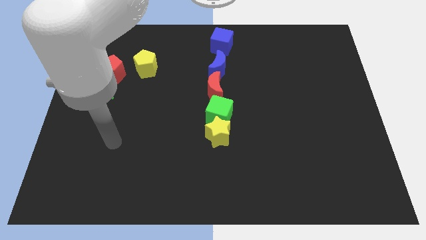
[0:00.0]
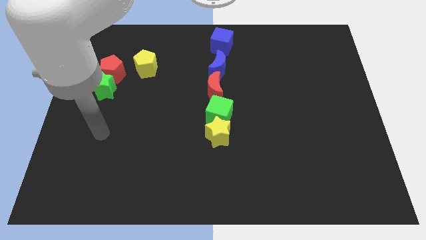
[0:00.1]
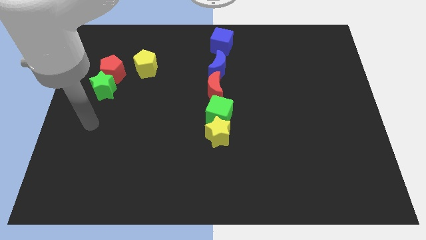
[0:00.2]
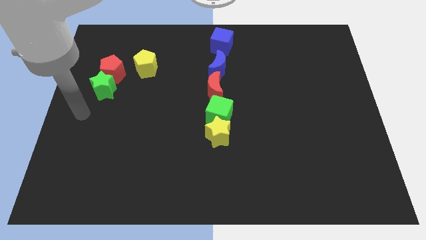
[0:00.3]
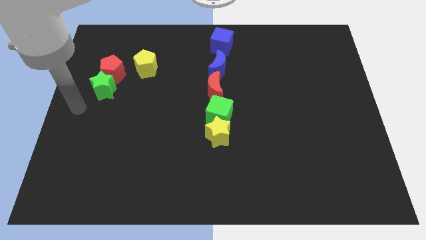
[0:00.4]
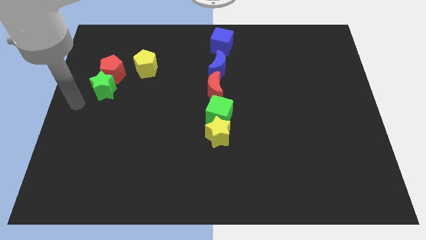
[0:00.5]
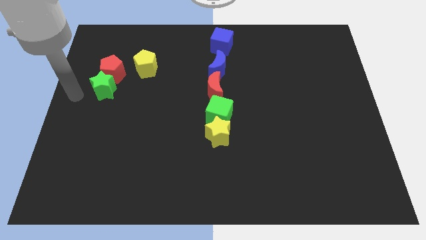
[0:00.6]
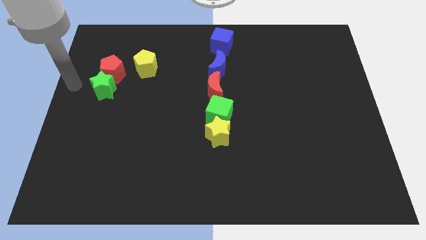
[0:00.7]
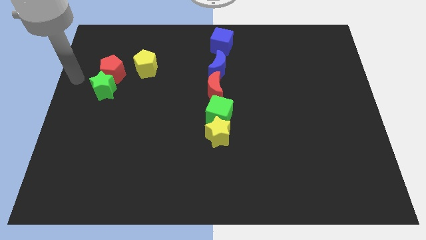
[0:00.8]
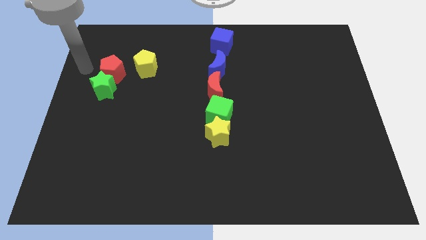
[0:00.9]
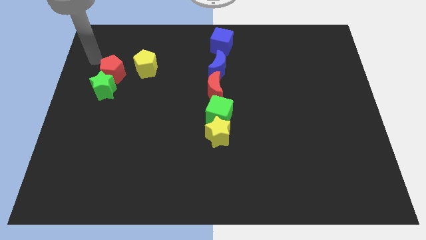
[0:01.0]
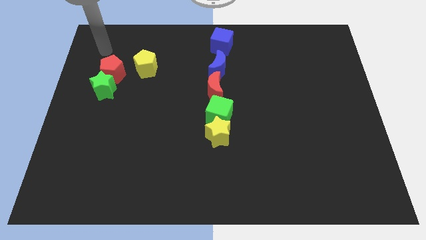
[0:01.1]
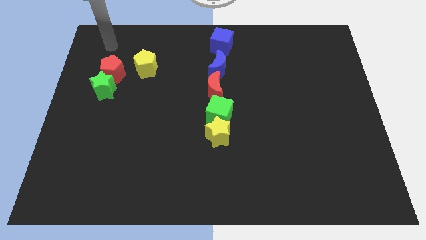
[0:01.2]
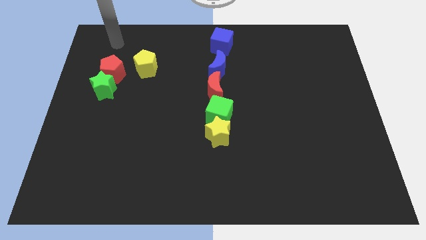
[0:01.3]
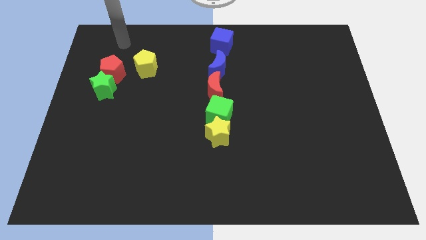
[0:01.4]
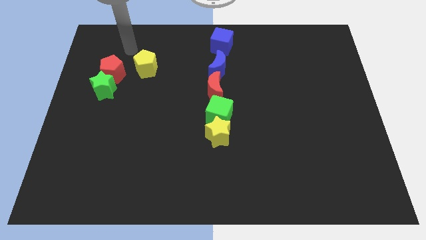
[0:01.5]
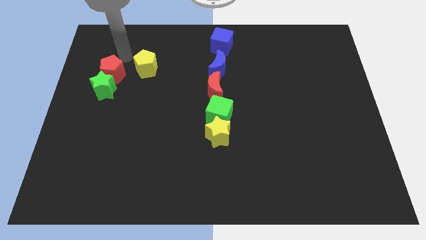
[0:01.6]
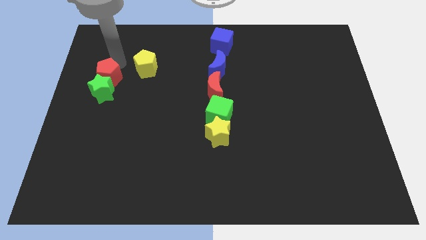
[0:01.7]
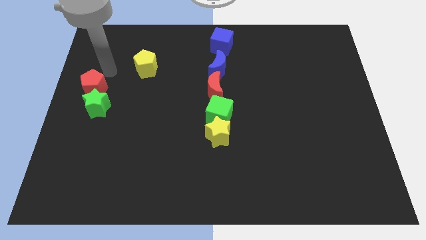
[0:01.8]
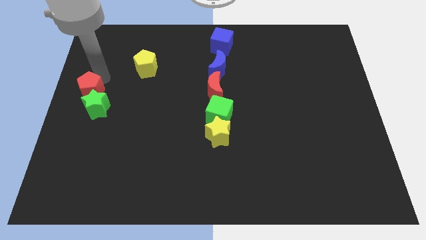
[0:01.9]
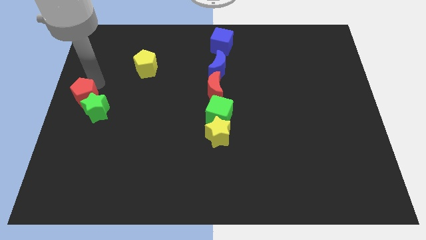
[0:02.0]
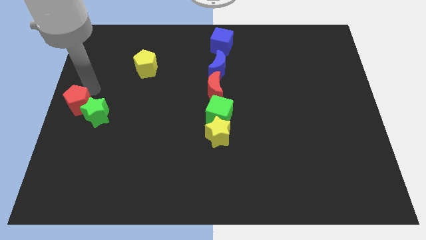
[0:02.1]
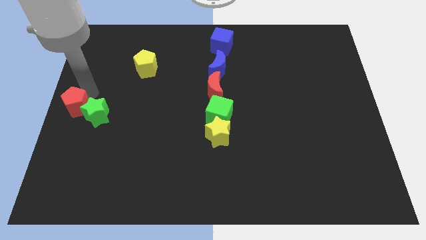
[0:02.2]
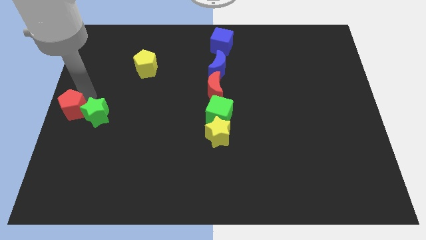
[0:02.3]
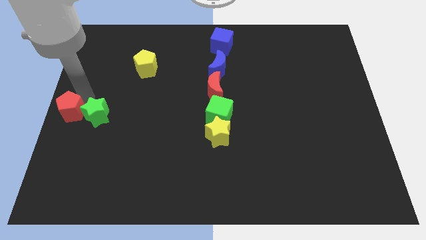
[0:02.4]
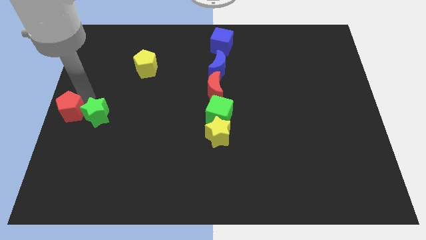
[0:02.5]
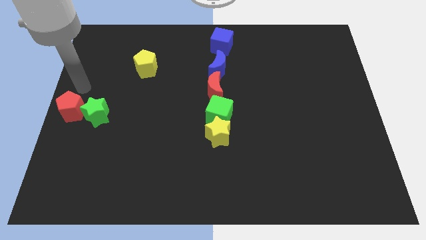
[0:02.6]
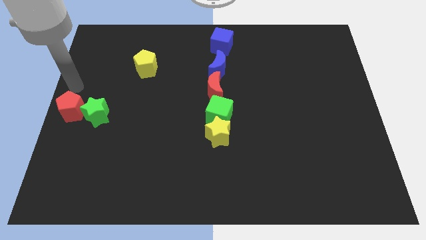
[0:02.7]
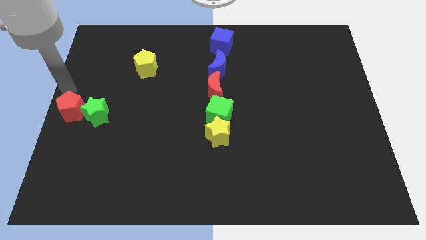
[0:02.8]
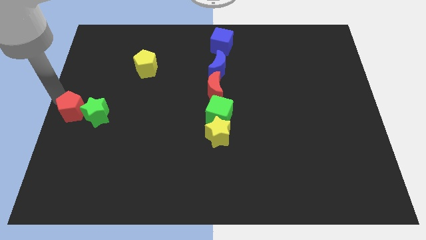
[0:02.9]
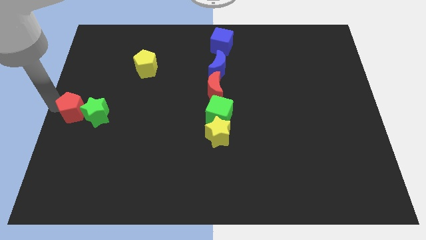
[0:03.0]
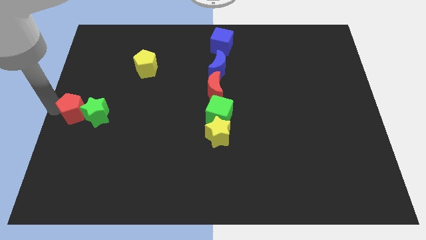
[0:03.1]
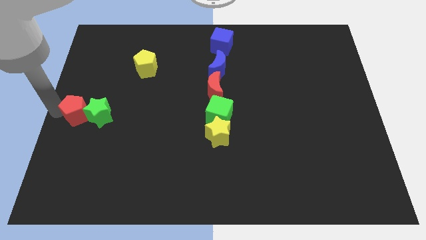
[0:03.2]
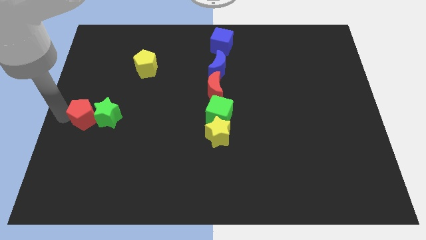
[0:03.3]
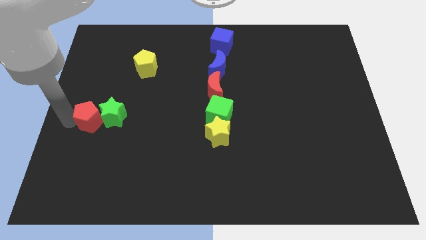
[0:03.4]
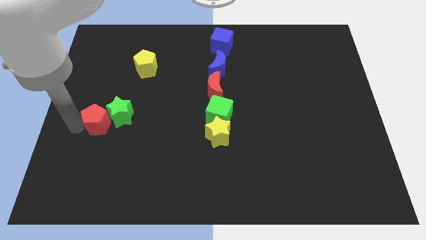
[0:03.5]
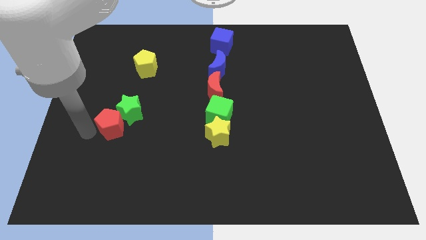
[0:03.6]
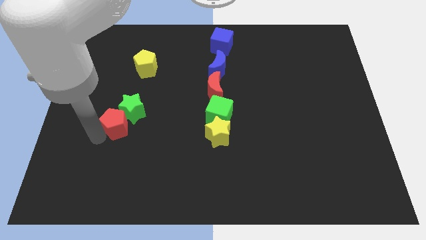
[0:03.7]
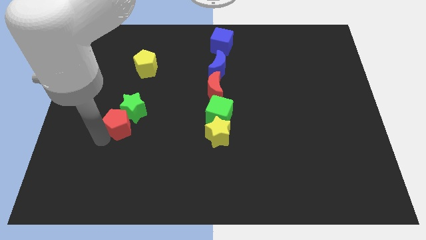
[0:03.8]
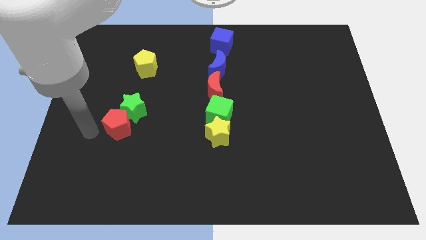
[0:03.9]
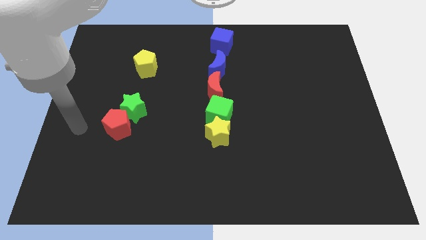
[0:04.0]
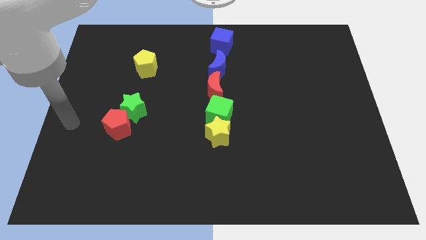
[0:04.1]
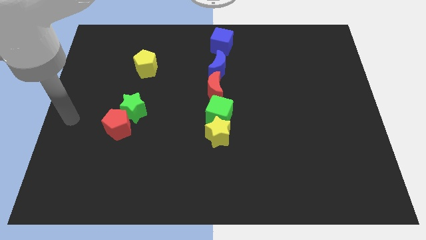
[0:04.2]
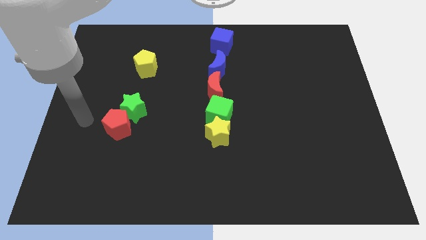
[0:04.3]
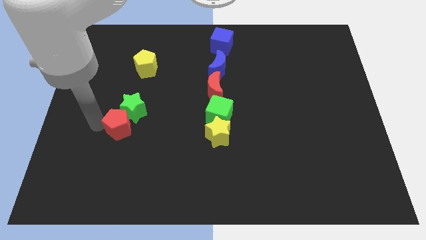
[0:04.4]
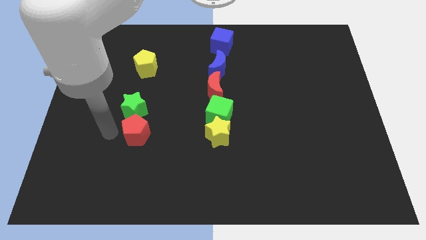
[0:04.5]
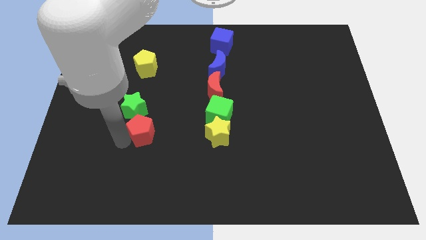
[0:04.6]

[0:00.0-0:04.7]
push green star with red pentagon towards the center of the board

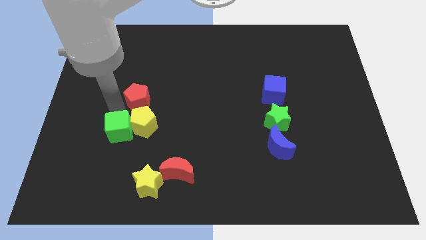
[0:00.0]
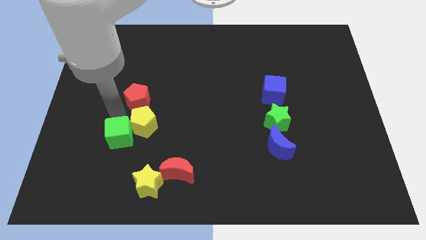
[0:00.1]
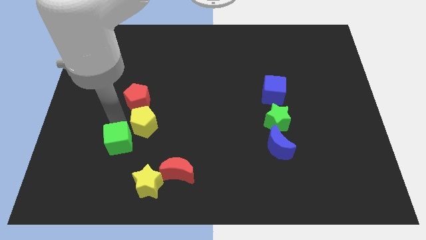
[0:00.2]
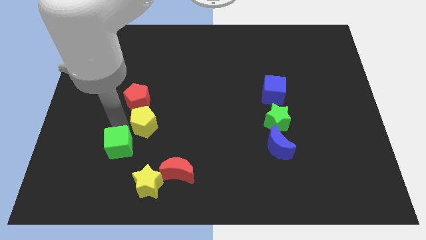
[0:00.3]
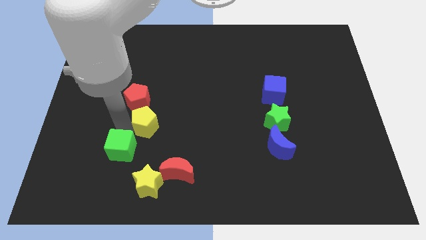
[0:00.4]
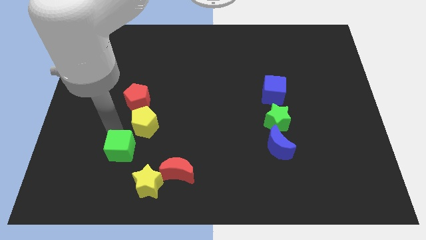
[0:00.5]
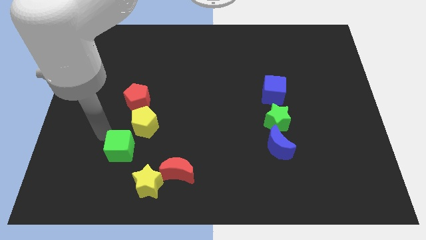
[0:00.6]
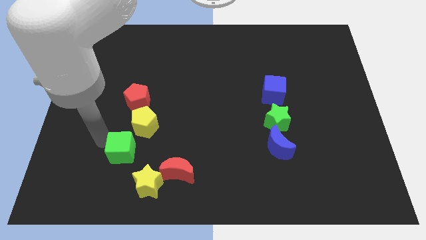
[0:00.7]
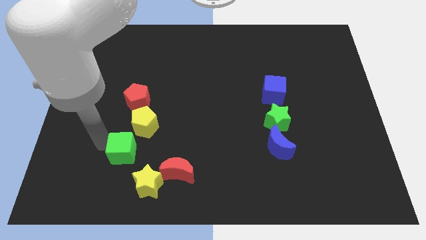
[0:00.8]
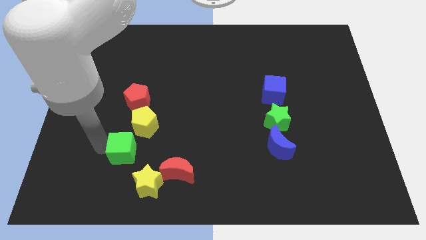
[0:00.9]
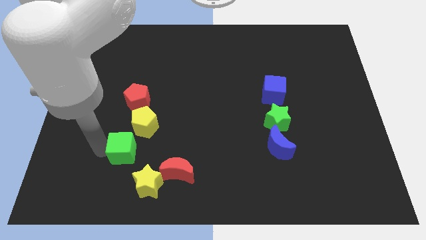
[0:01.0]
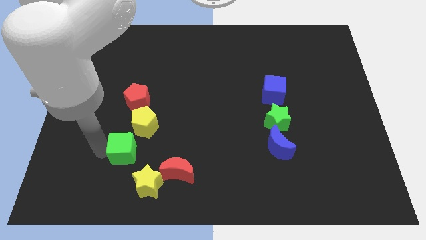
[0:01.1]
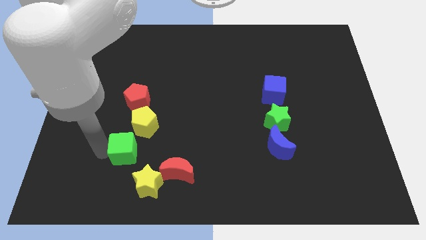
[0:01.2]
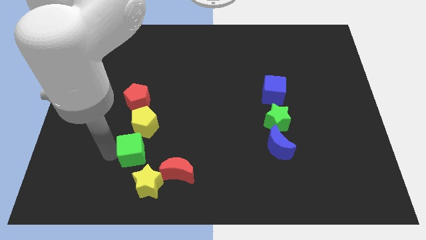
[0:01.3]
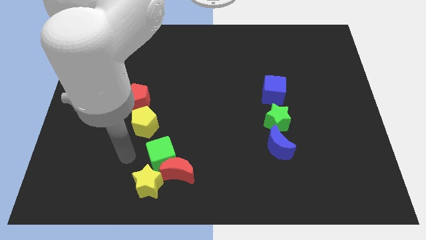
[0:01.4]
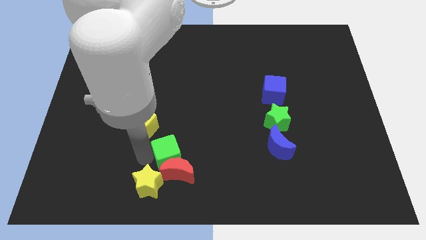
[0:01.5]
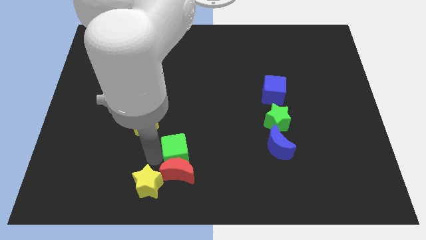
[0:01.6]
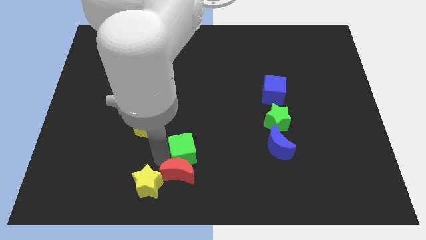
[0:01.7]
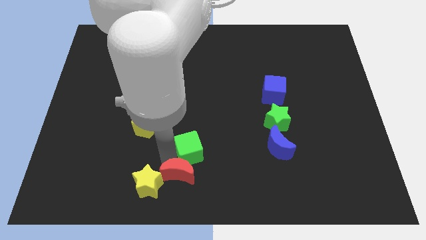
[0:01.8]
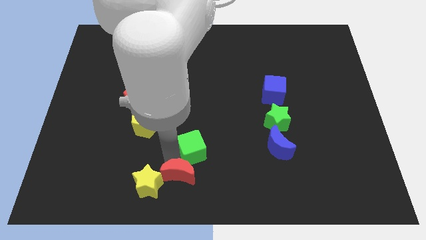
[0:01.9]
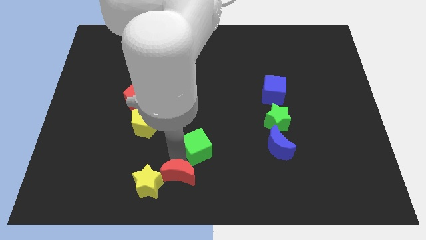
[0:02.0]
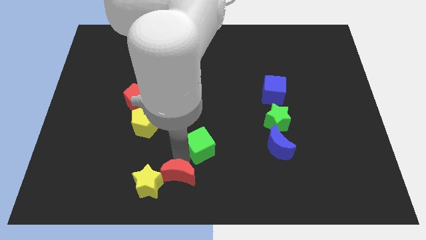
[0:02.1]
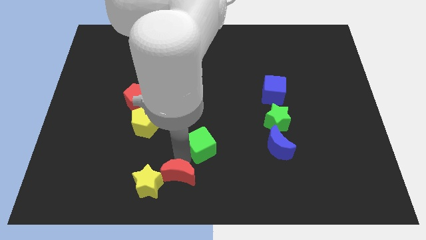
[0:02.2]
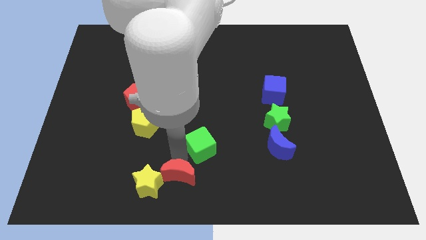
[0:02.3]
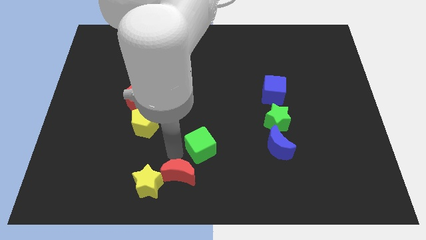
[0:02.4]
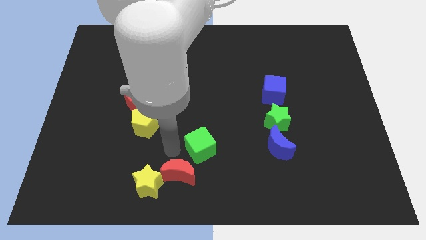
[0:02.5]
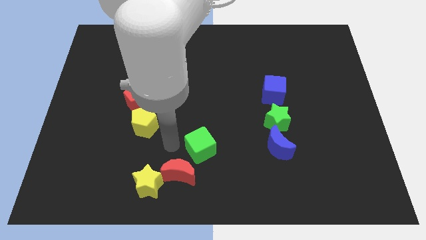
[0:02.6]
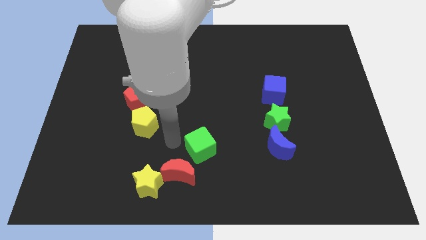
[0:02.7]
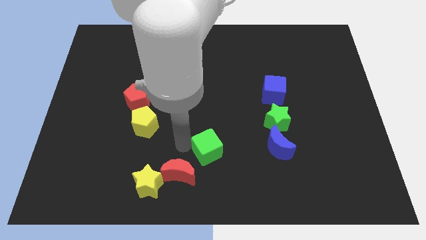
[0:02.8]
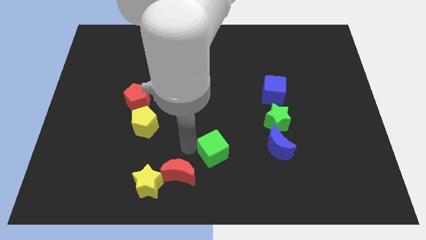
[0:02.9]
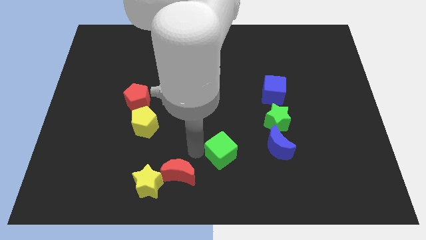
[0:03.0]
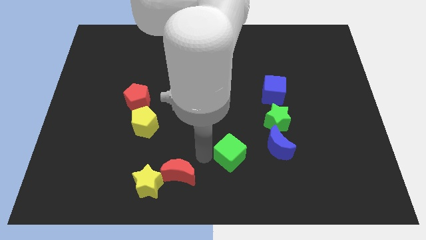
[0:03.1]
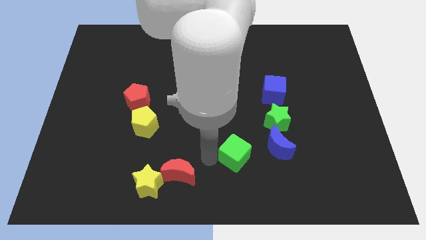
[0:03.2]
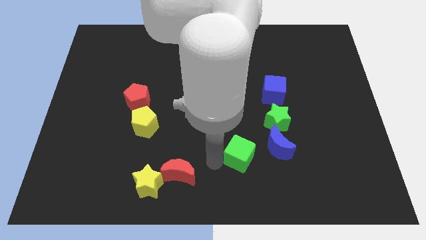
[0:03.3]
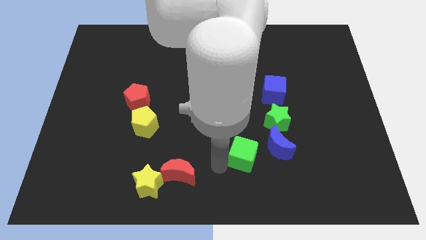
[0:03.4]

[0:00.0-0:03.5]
separate green cube from the yellow pentagon

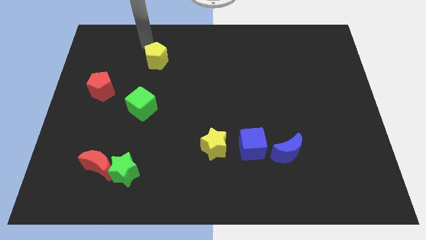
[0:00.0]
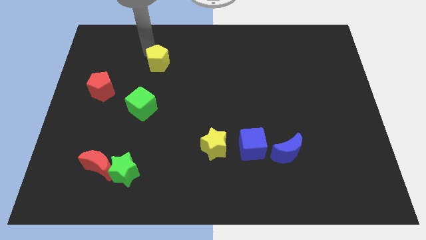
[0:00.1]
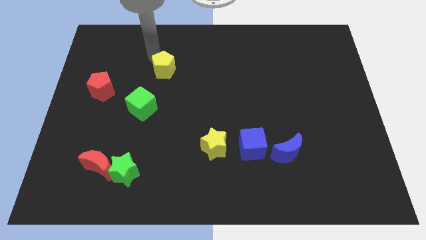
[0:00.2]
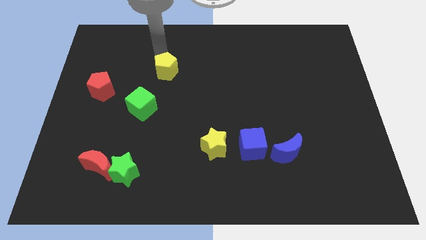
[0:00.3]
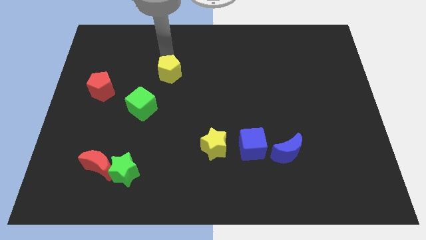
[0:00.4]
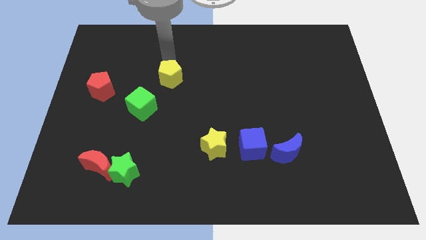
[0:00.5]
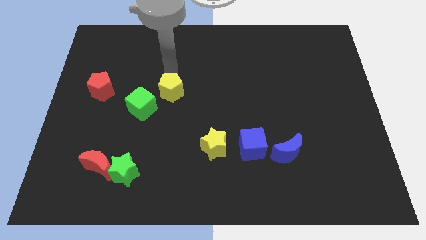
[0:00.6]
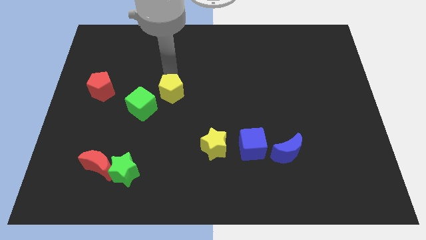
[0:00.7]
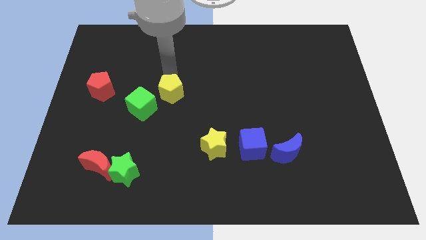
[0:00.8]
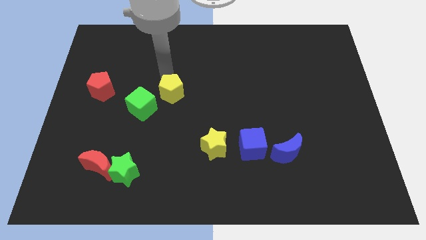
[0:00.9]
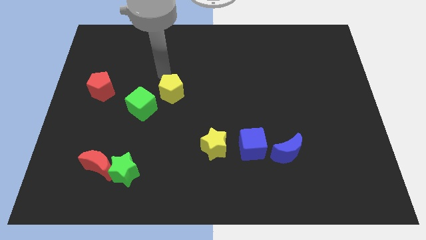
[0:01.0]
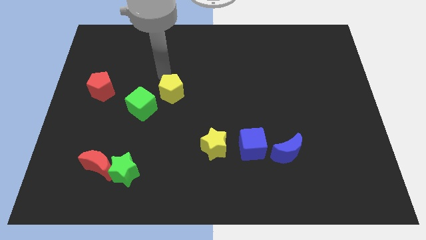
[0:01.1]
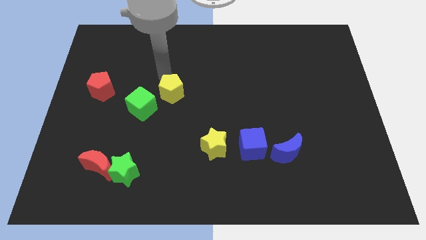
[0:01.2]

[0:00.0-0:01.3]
move the yellow pentagon near the green cube
